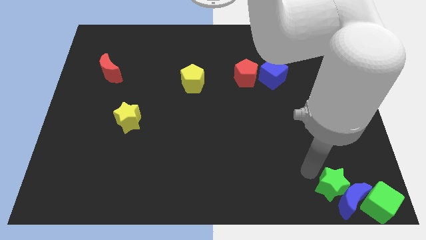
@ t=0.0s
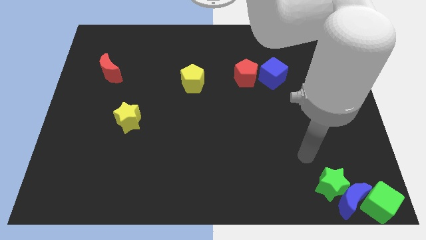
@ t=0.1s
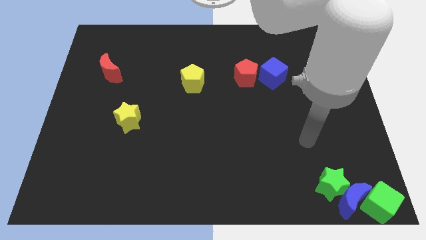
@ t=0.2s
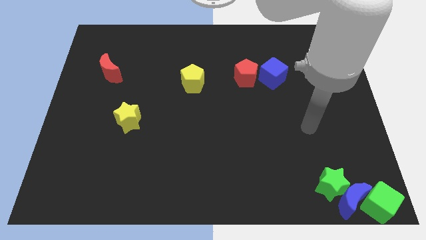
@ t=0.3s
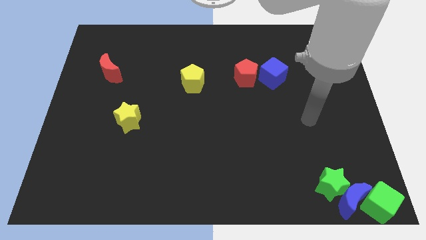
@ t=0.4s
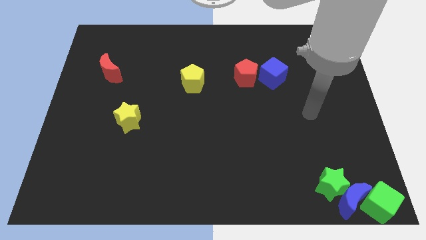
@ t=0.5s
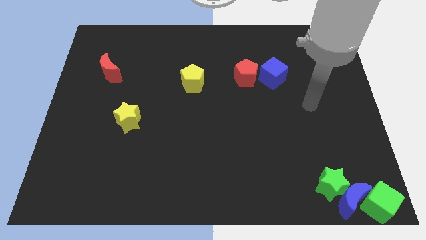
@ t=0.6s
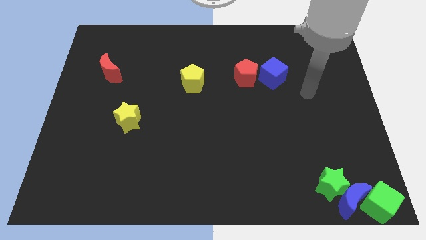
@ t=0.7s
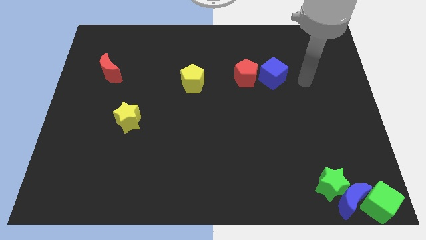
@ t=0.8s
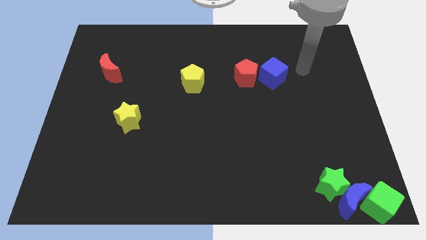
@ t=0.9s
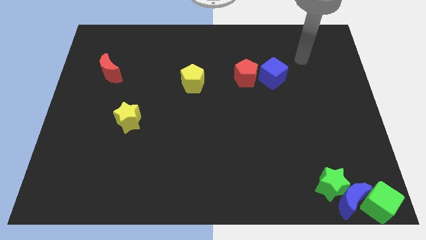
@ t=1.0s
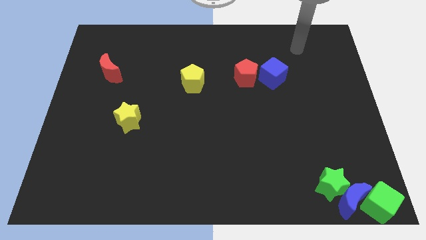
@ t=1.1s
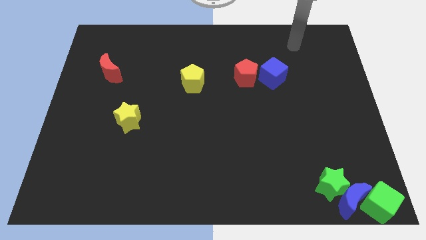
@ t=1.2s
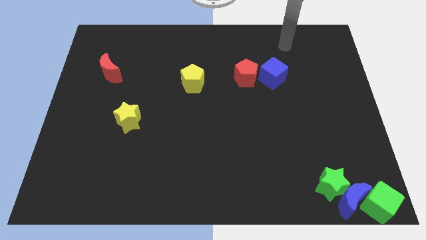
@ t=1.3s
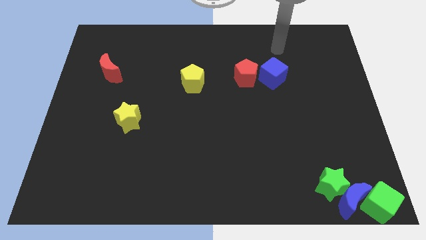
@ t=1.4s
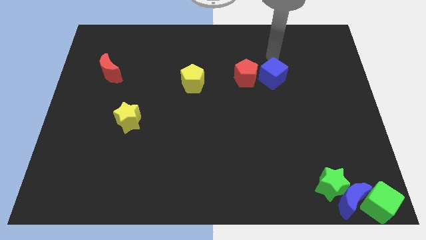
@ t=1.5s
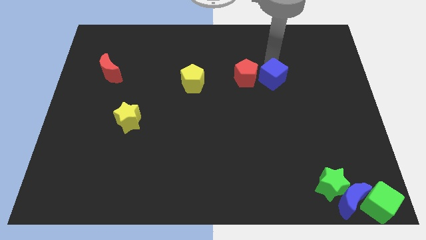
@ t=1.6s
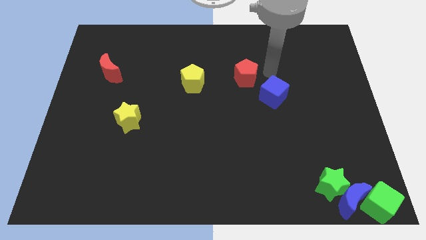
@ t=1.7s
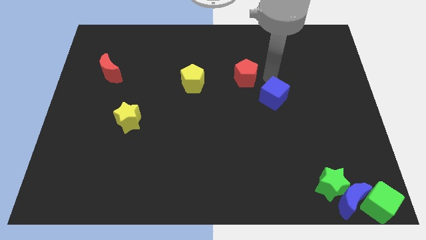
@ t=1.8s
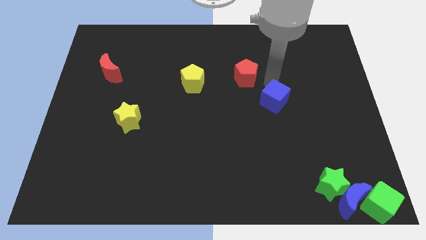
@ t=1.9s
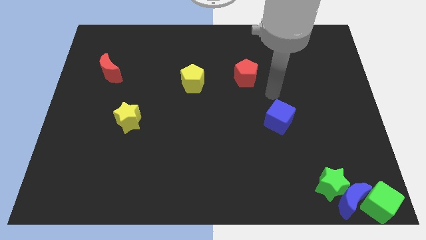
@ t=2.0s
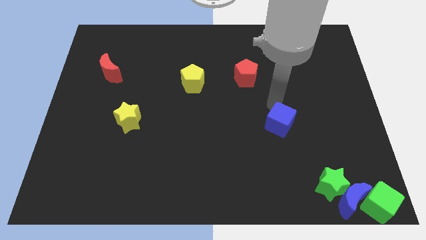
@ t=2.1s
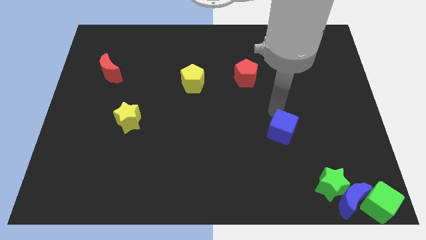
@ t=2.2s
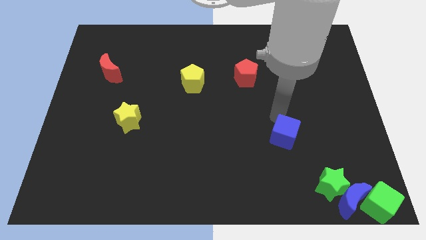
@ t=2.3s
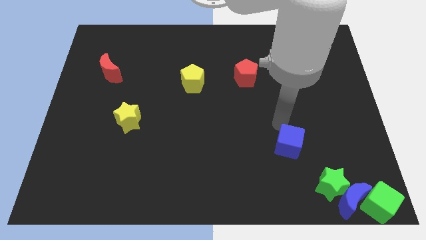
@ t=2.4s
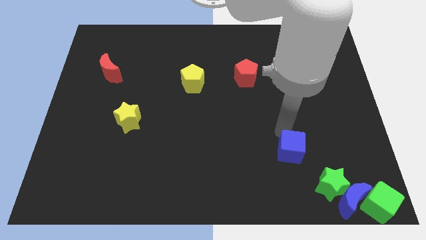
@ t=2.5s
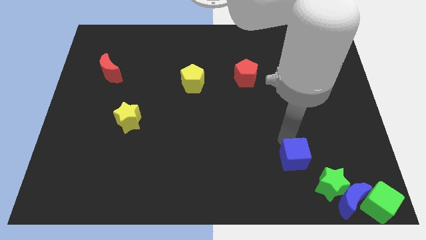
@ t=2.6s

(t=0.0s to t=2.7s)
separate the blue cube from red pentagon

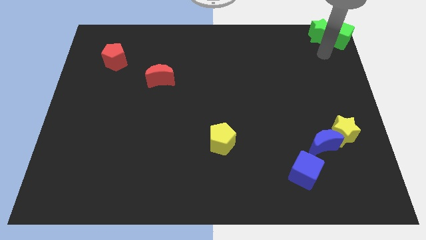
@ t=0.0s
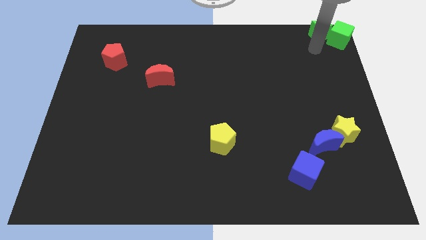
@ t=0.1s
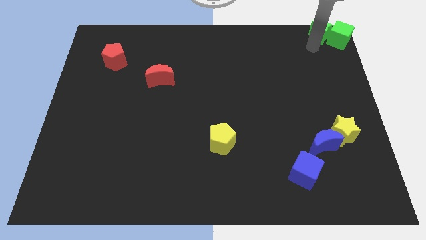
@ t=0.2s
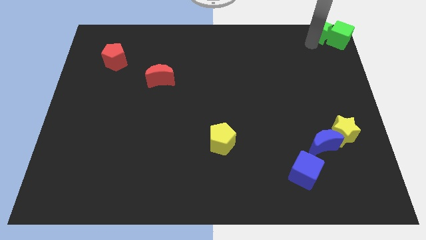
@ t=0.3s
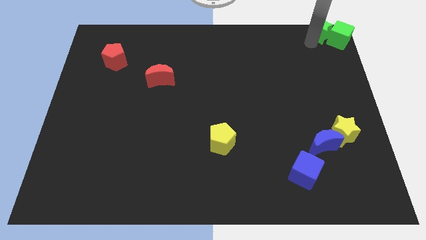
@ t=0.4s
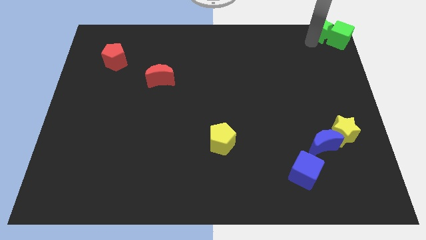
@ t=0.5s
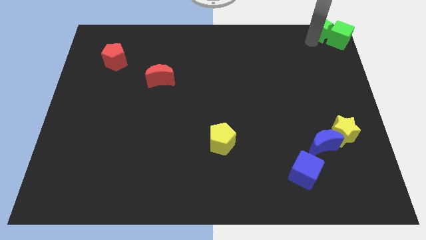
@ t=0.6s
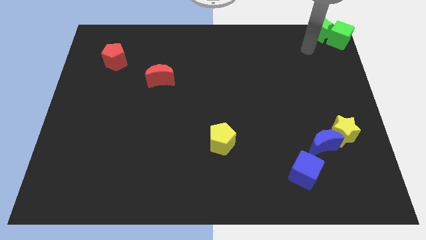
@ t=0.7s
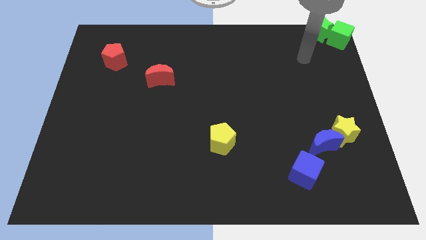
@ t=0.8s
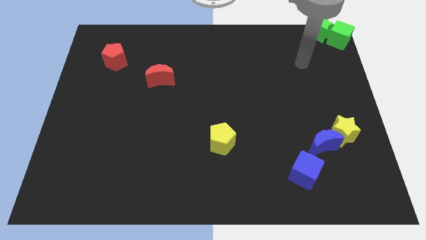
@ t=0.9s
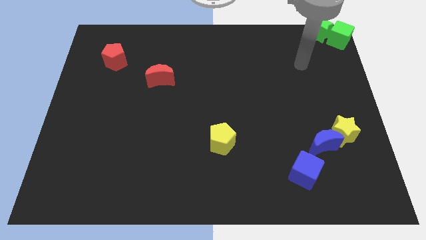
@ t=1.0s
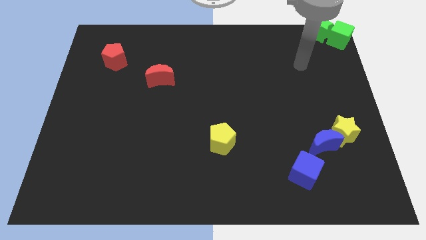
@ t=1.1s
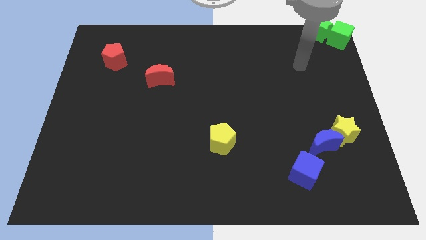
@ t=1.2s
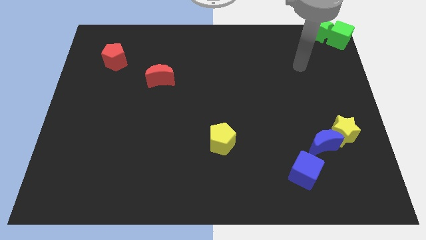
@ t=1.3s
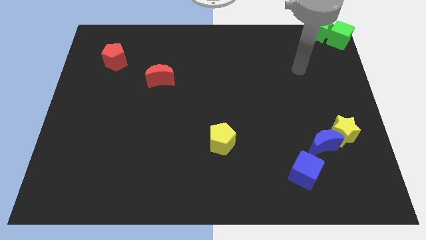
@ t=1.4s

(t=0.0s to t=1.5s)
move the arm away from the green blocks

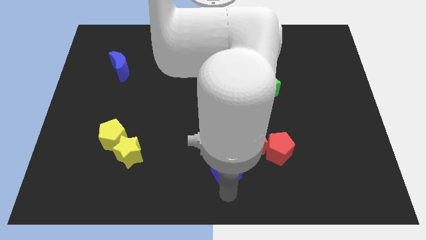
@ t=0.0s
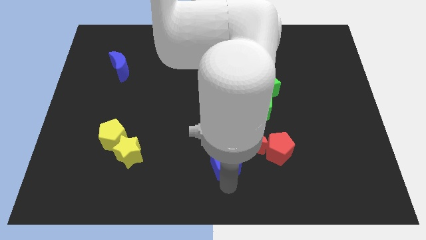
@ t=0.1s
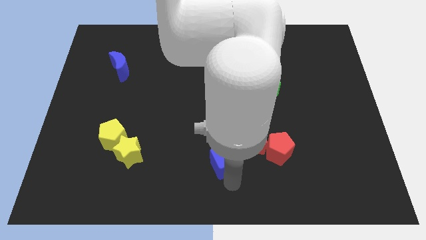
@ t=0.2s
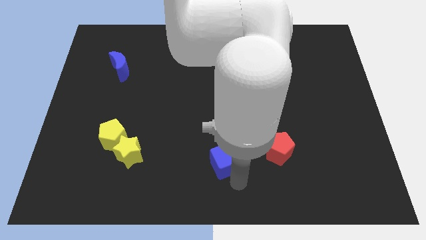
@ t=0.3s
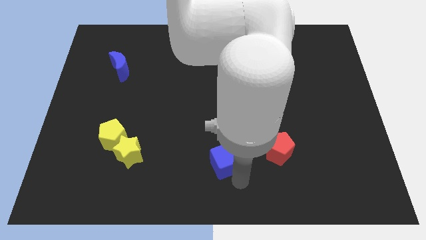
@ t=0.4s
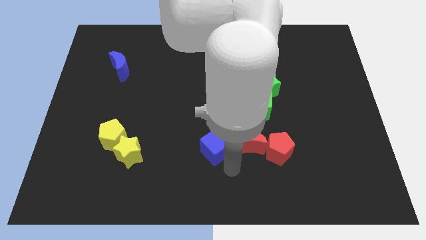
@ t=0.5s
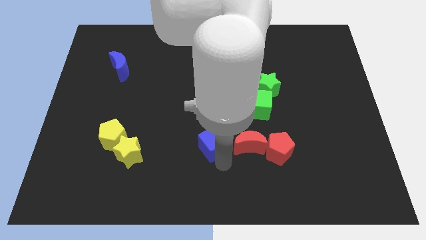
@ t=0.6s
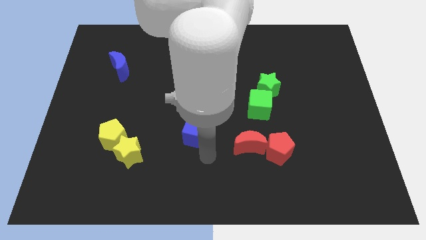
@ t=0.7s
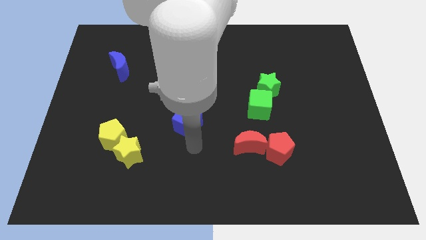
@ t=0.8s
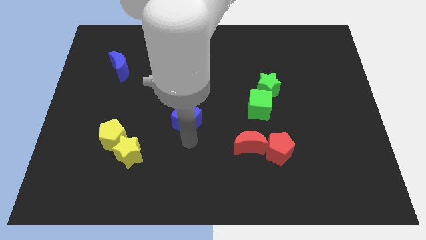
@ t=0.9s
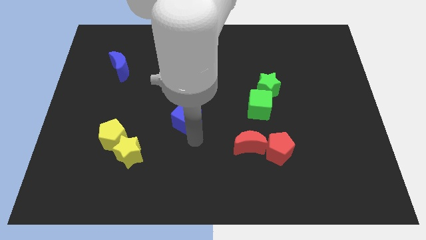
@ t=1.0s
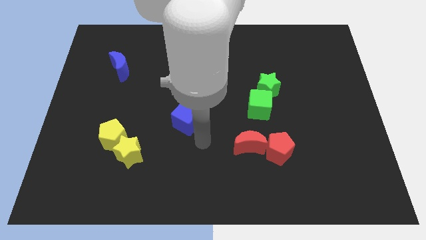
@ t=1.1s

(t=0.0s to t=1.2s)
move the blue cube to the center of the board

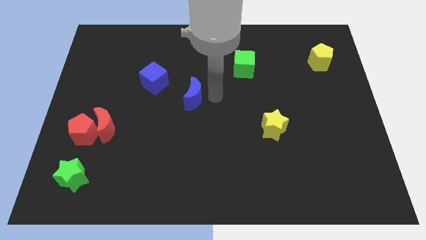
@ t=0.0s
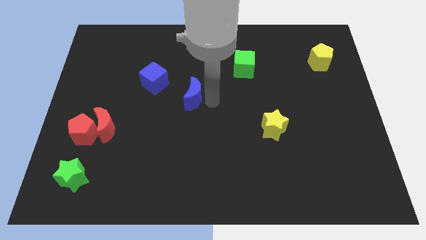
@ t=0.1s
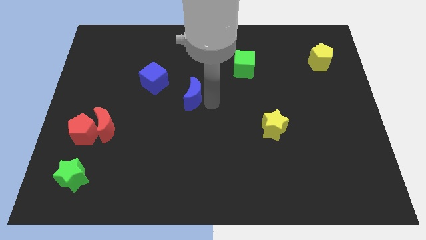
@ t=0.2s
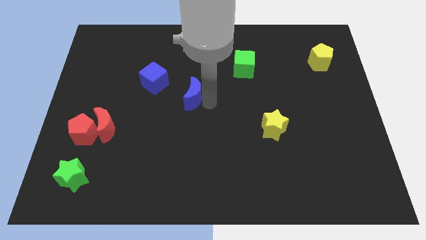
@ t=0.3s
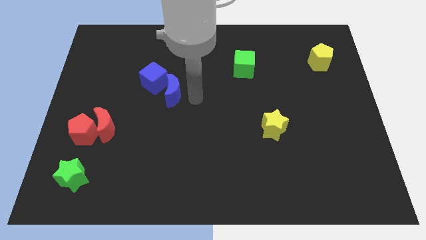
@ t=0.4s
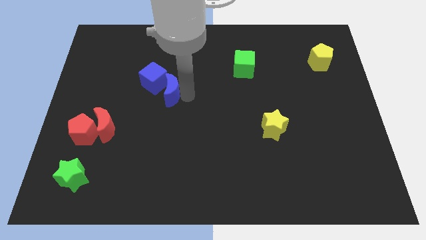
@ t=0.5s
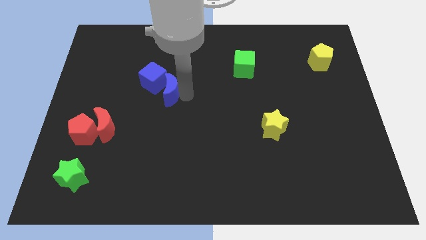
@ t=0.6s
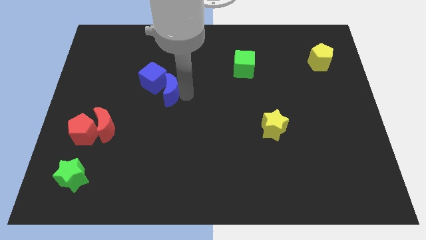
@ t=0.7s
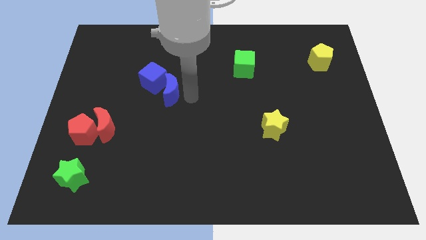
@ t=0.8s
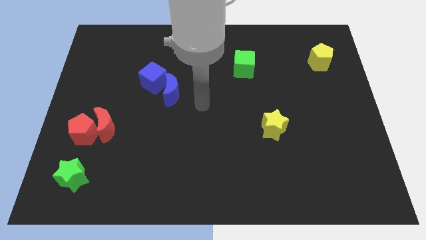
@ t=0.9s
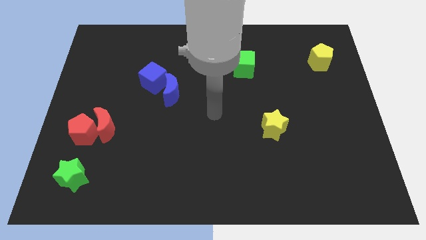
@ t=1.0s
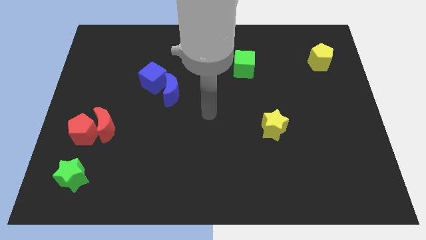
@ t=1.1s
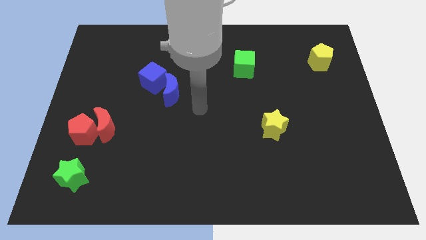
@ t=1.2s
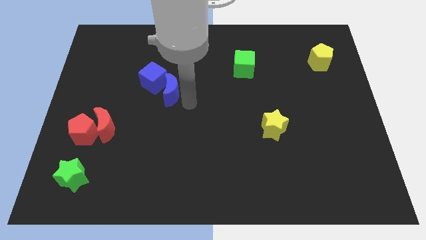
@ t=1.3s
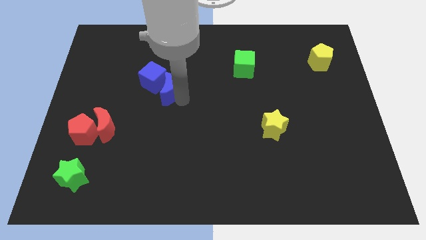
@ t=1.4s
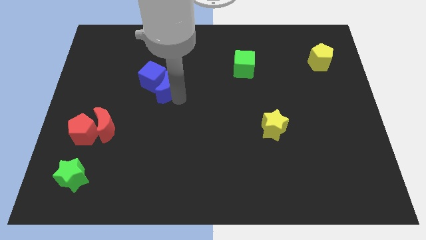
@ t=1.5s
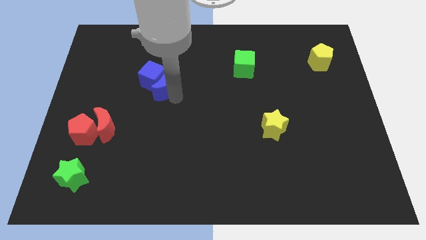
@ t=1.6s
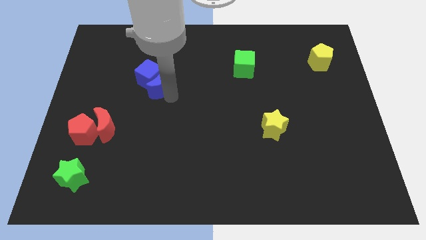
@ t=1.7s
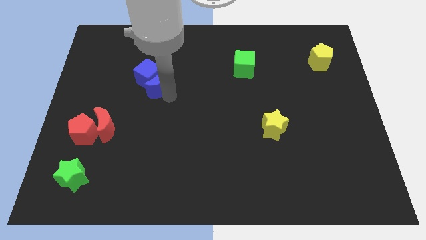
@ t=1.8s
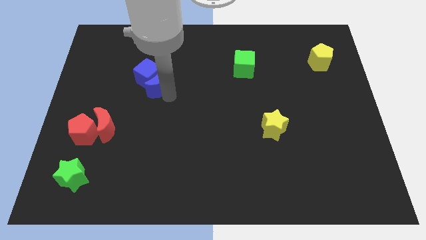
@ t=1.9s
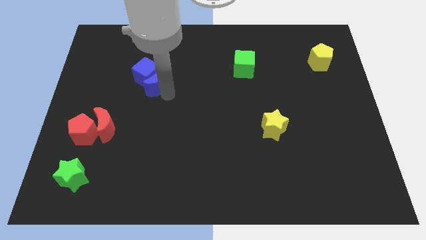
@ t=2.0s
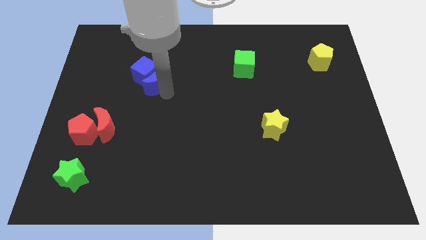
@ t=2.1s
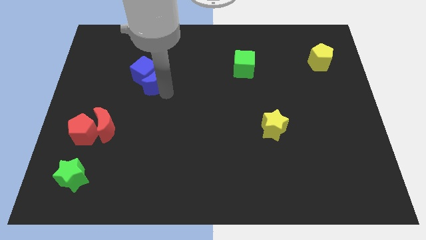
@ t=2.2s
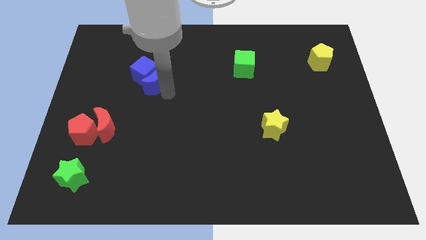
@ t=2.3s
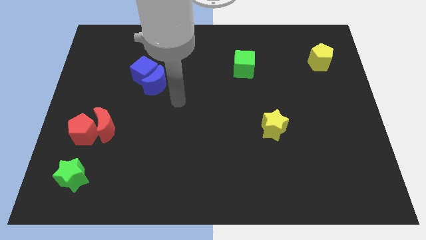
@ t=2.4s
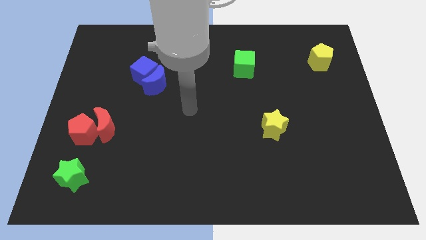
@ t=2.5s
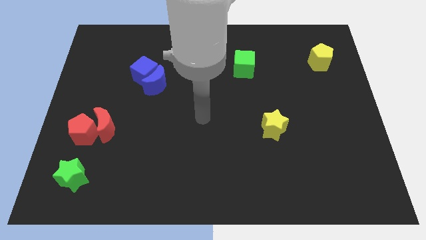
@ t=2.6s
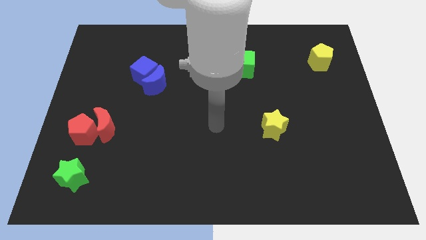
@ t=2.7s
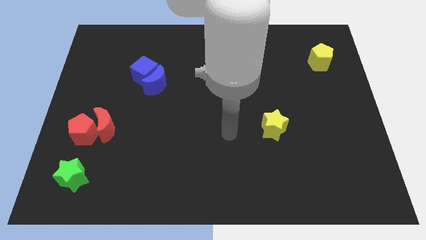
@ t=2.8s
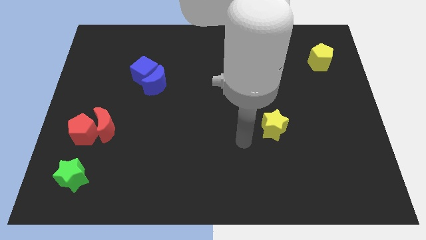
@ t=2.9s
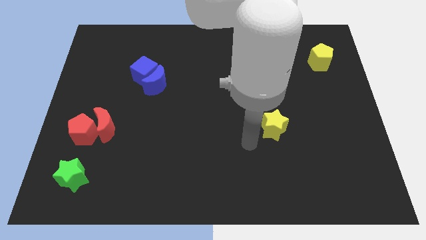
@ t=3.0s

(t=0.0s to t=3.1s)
push the blue moon into the blue cube

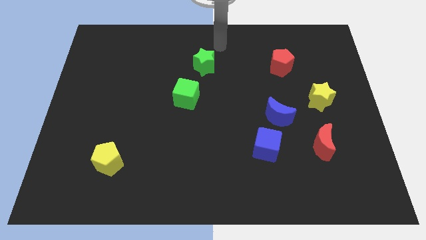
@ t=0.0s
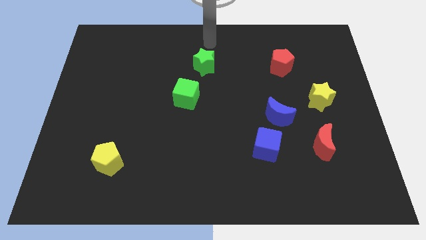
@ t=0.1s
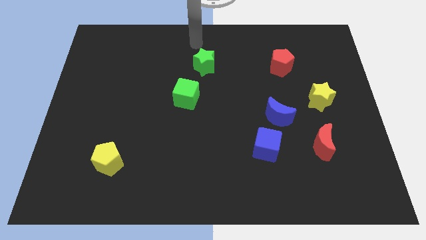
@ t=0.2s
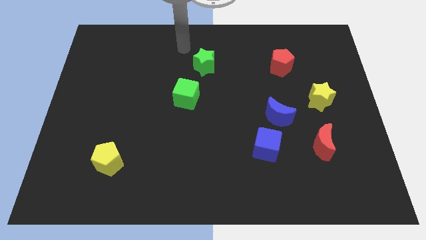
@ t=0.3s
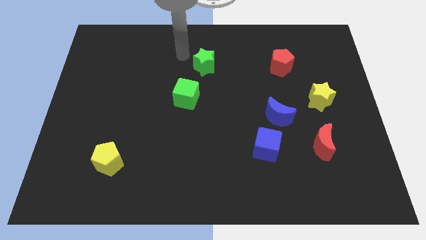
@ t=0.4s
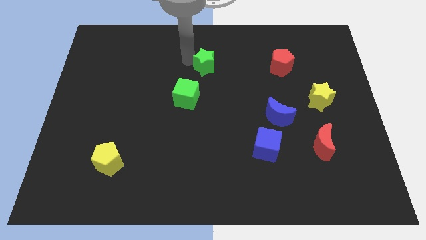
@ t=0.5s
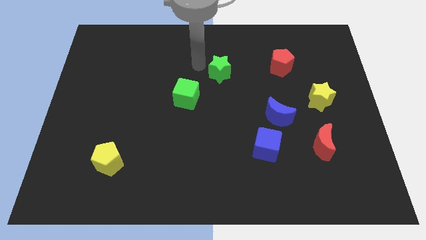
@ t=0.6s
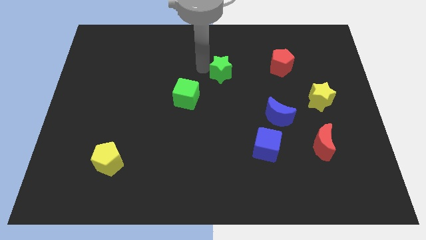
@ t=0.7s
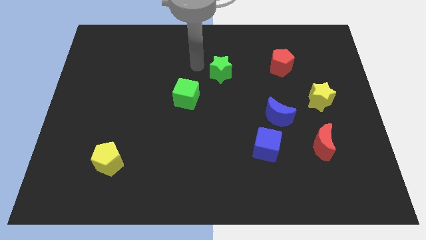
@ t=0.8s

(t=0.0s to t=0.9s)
place the green star diagonally to the green cube
